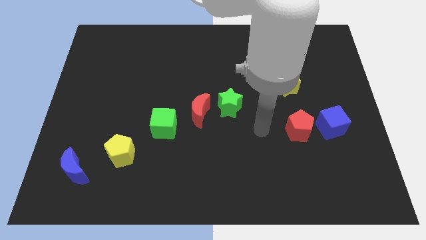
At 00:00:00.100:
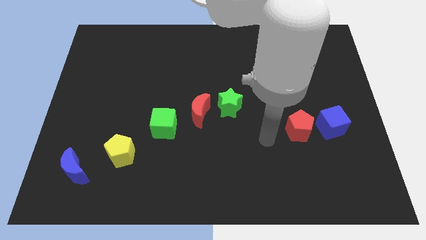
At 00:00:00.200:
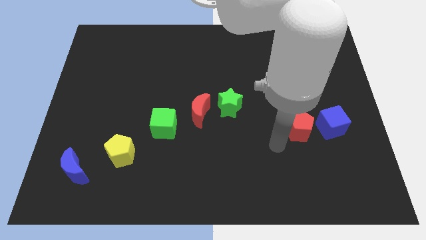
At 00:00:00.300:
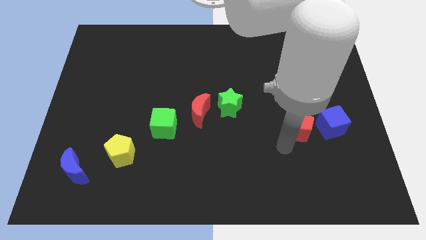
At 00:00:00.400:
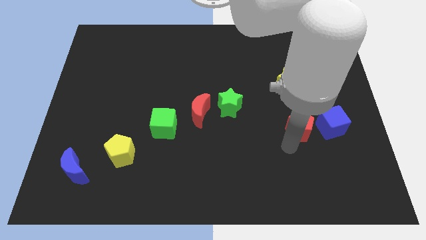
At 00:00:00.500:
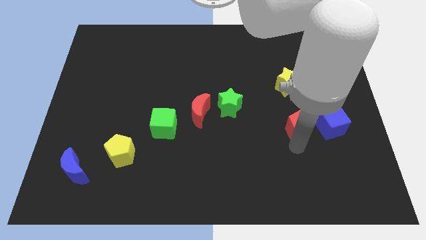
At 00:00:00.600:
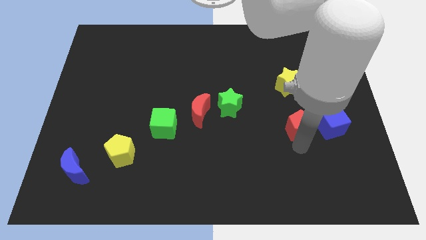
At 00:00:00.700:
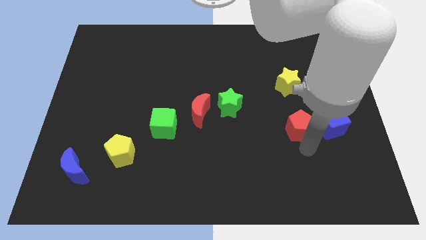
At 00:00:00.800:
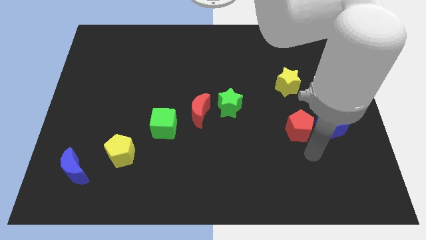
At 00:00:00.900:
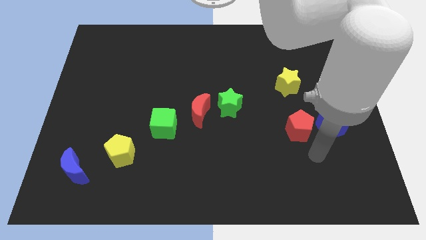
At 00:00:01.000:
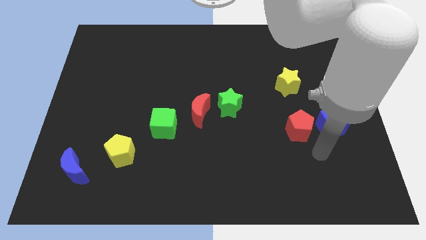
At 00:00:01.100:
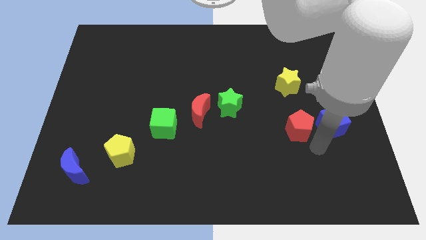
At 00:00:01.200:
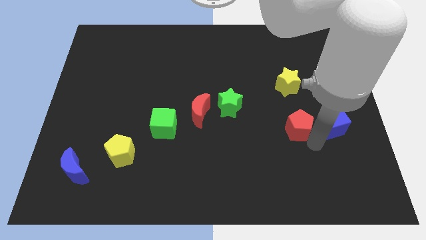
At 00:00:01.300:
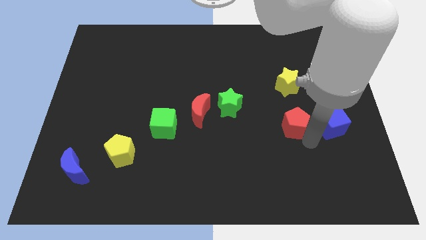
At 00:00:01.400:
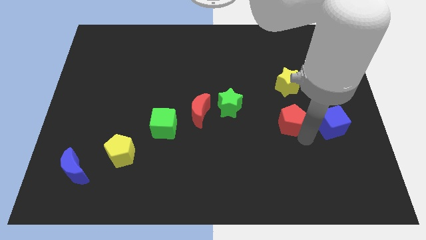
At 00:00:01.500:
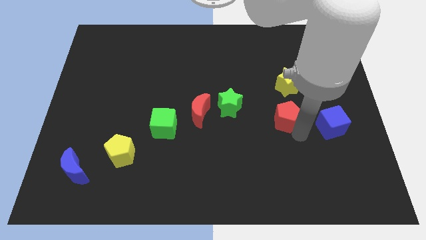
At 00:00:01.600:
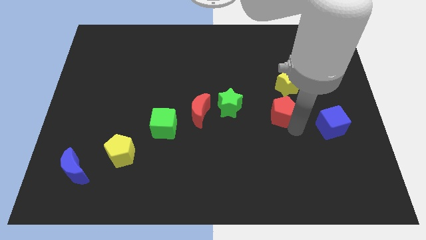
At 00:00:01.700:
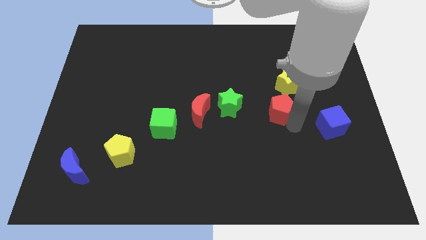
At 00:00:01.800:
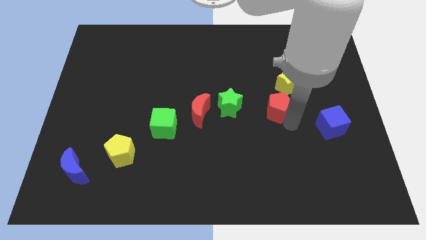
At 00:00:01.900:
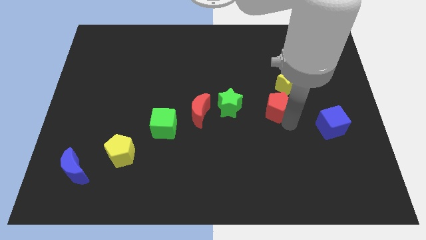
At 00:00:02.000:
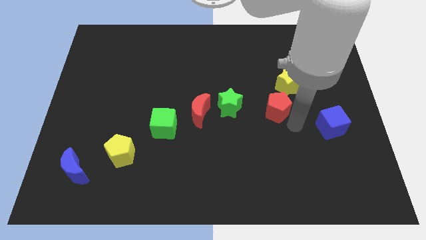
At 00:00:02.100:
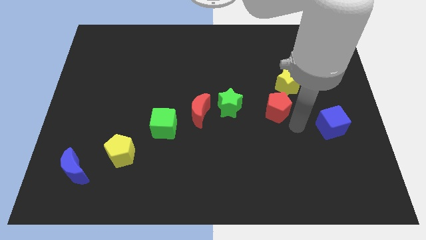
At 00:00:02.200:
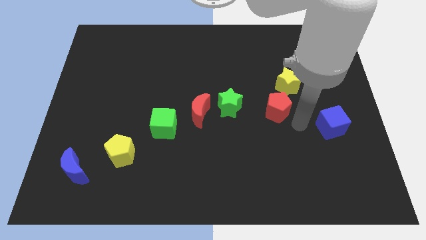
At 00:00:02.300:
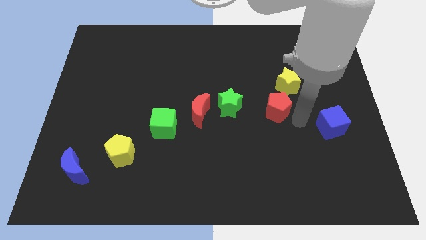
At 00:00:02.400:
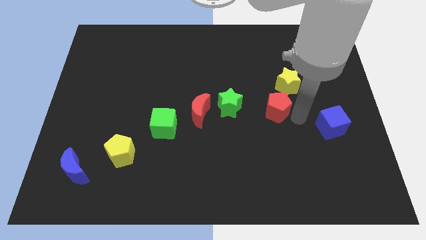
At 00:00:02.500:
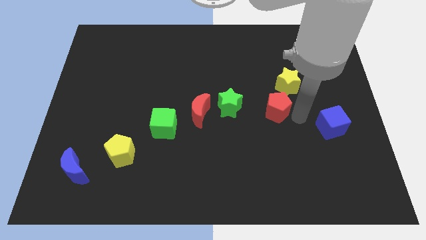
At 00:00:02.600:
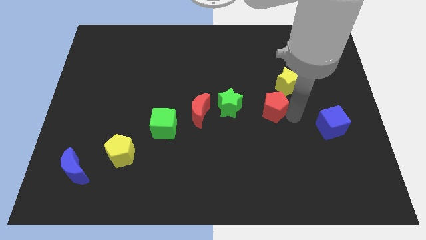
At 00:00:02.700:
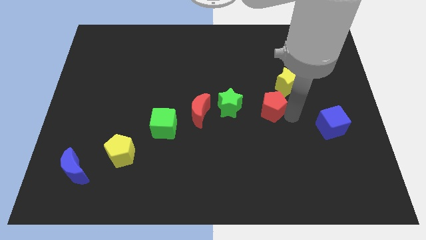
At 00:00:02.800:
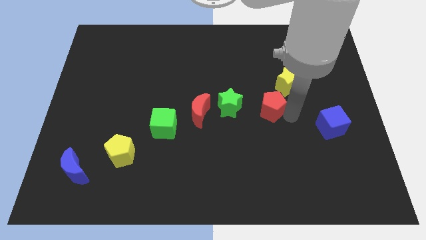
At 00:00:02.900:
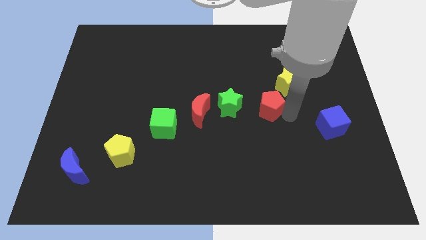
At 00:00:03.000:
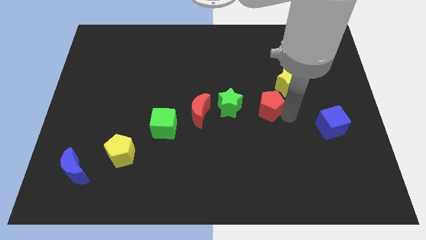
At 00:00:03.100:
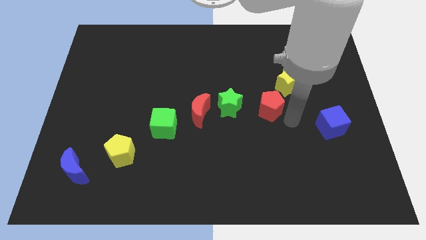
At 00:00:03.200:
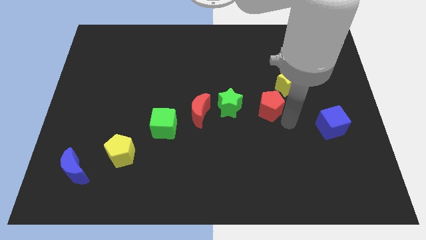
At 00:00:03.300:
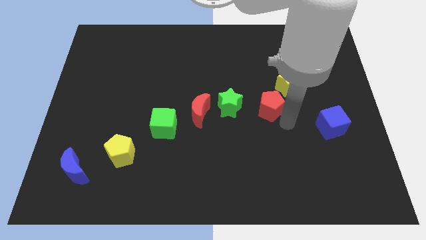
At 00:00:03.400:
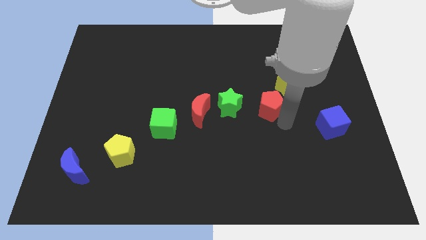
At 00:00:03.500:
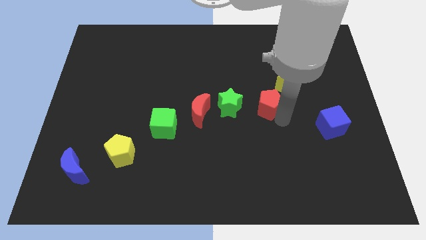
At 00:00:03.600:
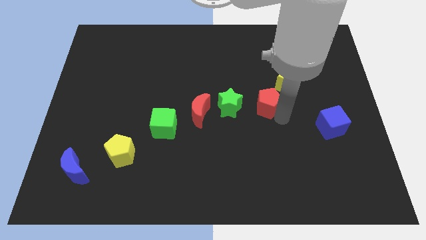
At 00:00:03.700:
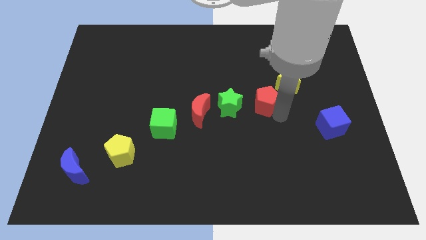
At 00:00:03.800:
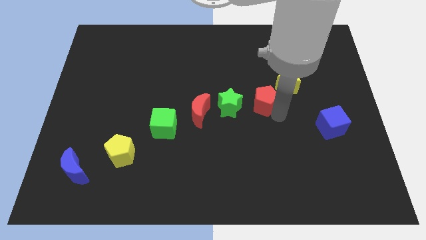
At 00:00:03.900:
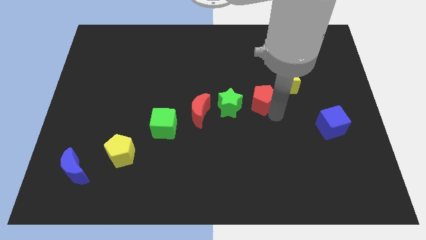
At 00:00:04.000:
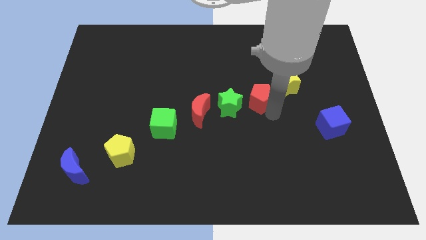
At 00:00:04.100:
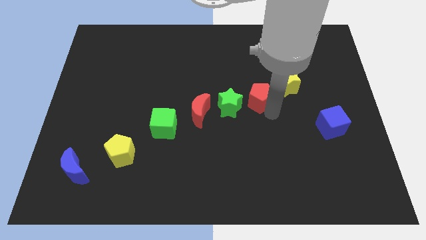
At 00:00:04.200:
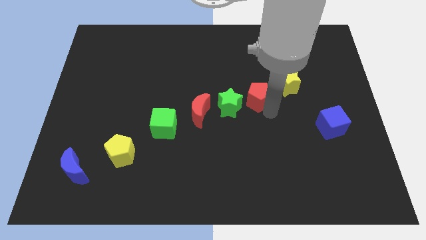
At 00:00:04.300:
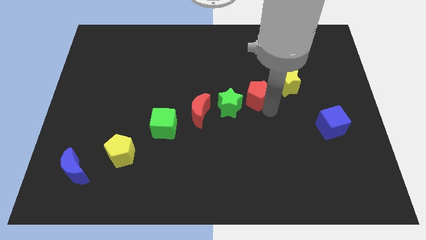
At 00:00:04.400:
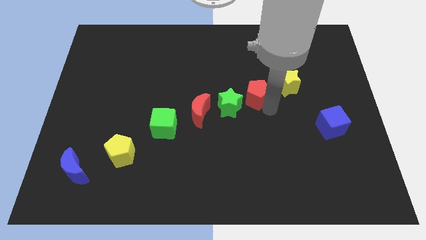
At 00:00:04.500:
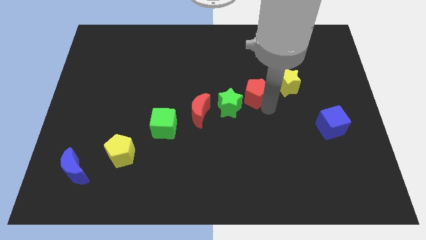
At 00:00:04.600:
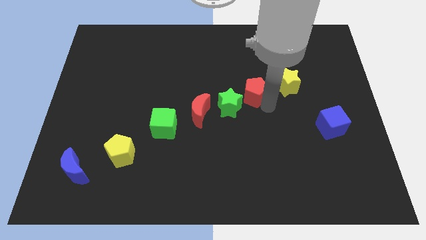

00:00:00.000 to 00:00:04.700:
place the red pentagon between the green star and yellow star

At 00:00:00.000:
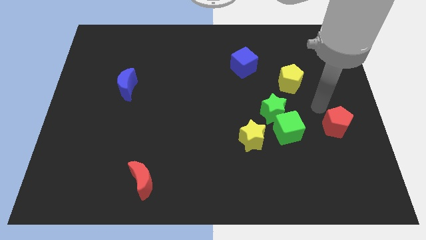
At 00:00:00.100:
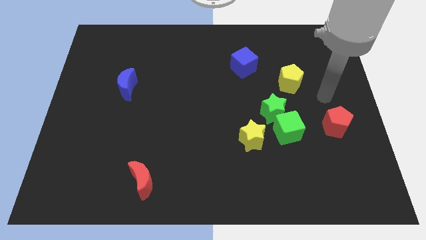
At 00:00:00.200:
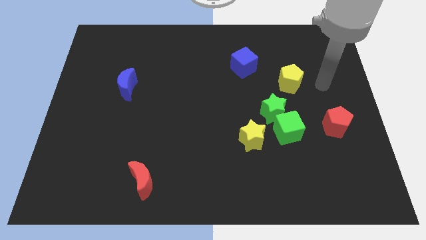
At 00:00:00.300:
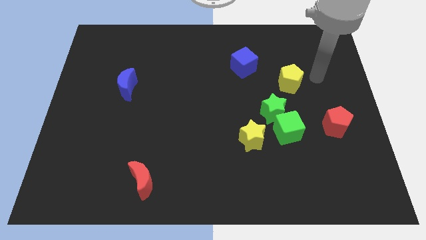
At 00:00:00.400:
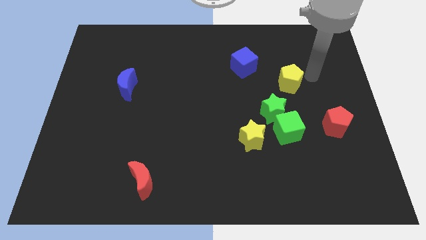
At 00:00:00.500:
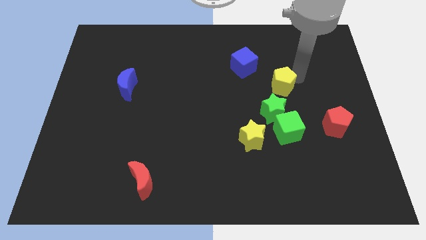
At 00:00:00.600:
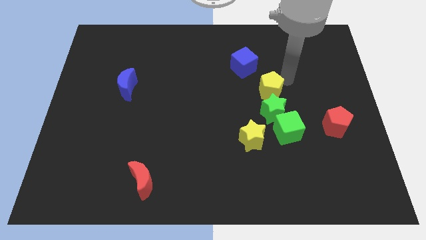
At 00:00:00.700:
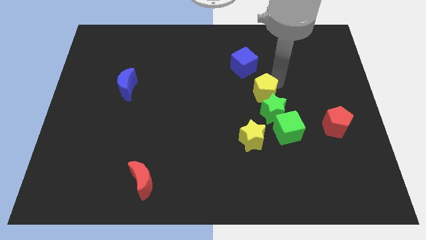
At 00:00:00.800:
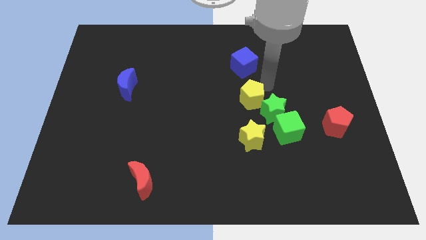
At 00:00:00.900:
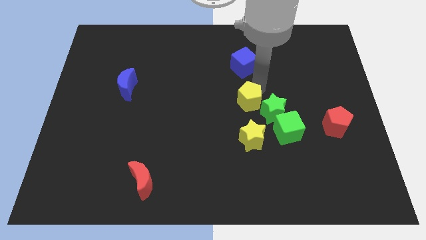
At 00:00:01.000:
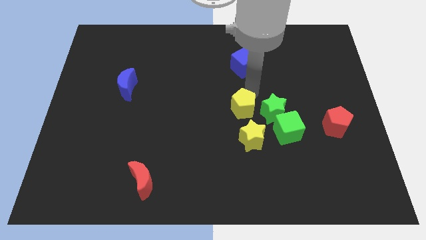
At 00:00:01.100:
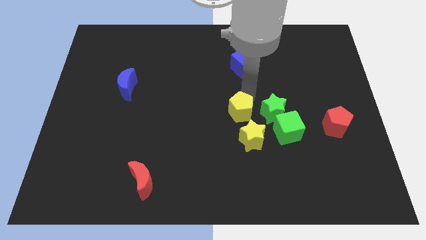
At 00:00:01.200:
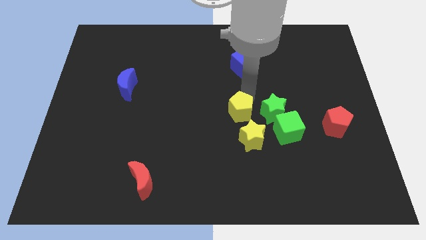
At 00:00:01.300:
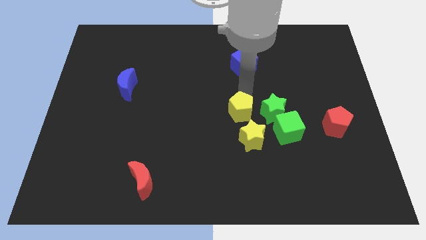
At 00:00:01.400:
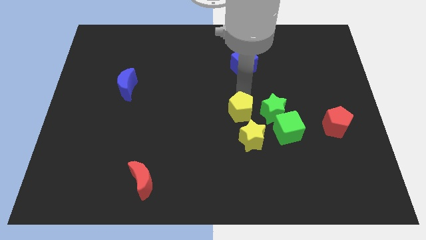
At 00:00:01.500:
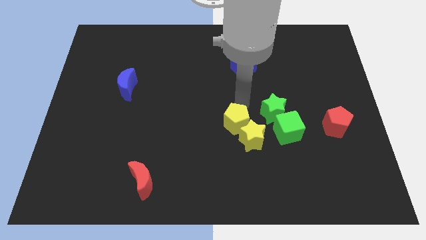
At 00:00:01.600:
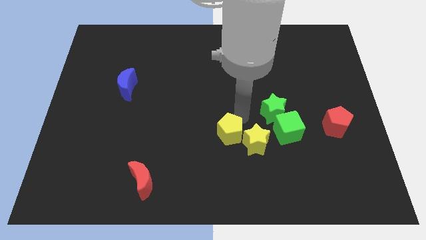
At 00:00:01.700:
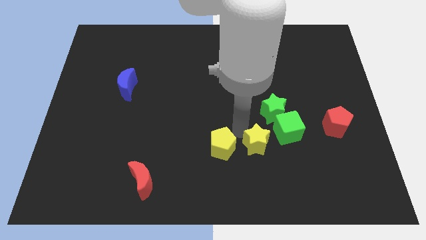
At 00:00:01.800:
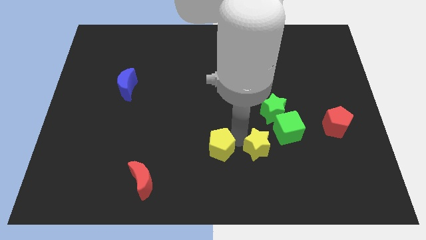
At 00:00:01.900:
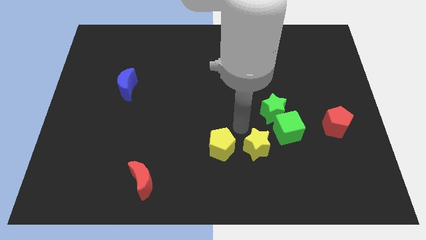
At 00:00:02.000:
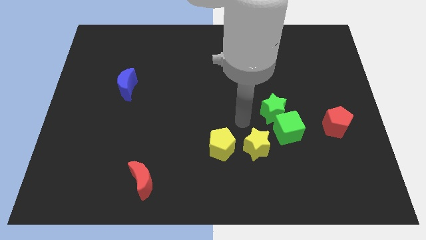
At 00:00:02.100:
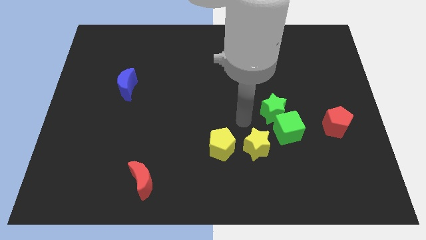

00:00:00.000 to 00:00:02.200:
move the yellow pentagon on the left side of the yellow star

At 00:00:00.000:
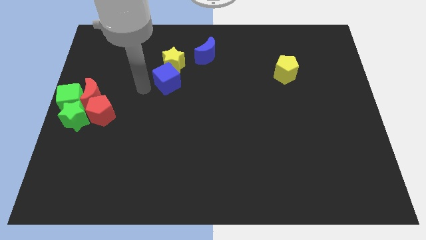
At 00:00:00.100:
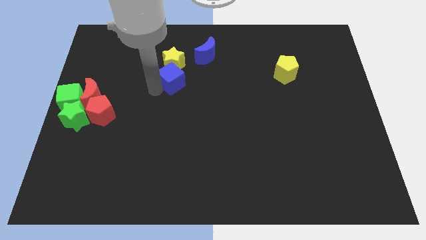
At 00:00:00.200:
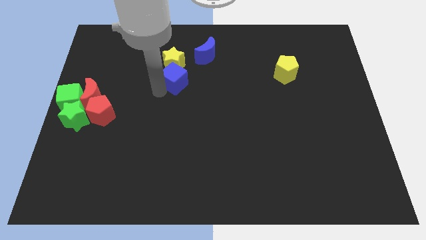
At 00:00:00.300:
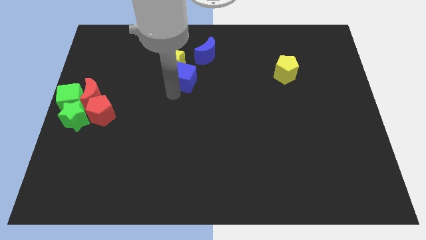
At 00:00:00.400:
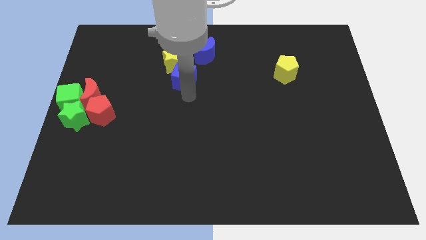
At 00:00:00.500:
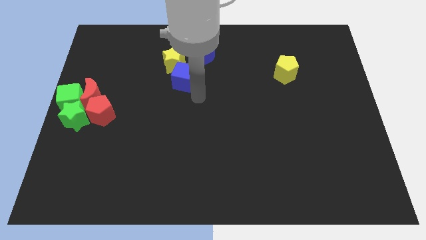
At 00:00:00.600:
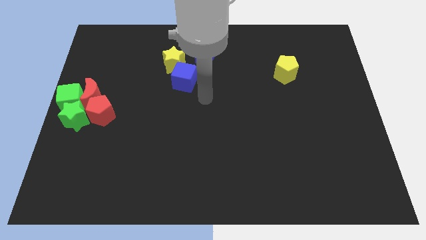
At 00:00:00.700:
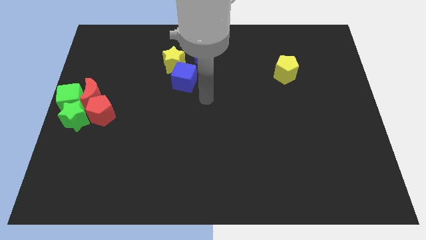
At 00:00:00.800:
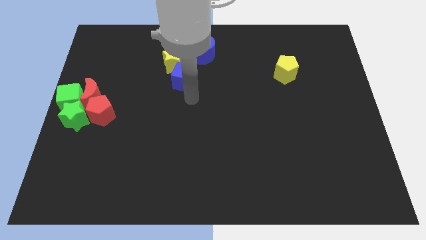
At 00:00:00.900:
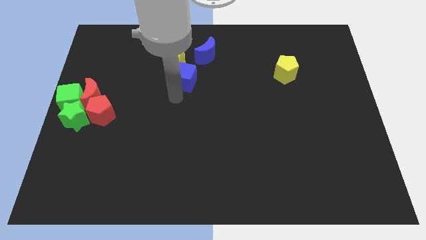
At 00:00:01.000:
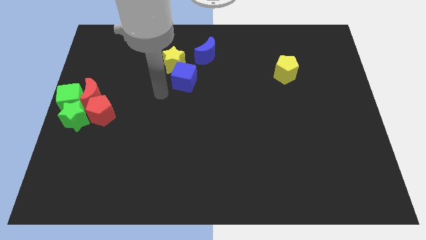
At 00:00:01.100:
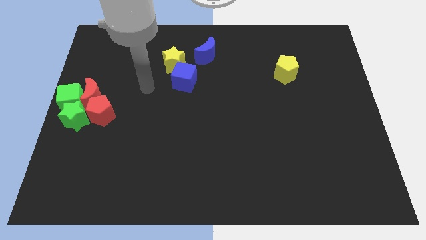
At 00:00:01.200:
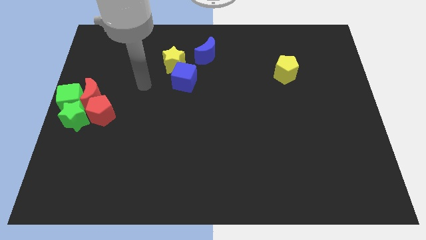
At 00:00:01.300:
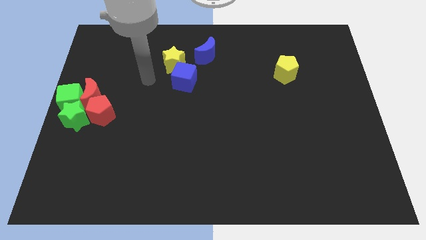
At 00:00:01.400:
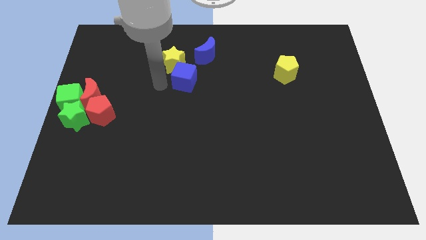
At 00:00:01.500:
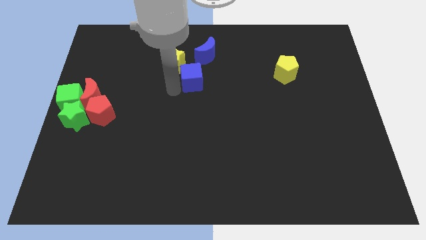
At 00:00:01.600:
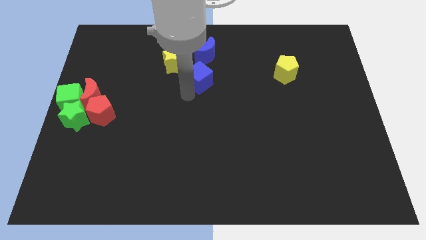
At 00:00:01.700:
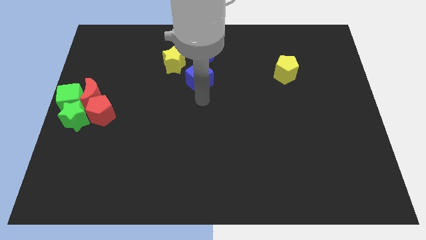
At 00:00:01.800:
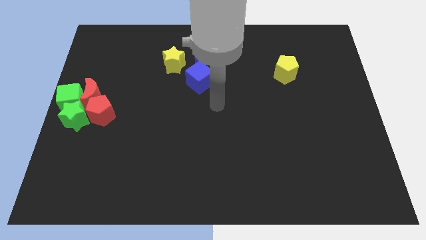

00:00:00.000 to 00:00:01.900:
place blue cube to the bottom of blue moon
